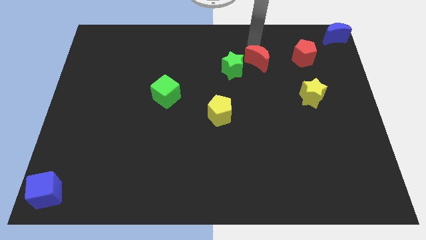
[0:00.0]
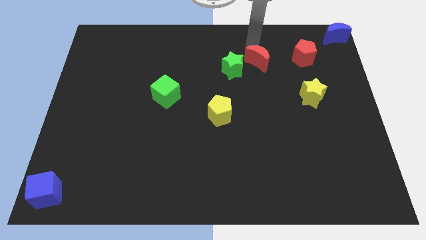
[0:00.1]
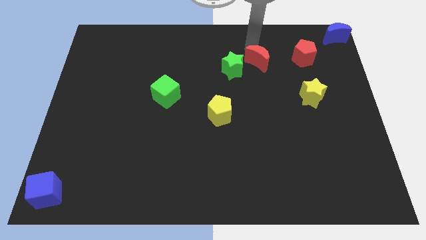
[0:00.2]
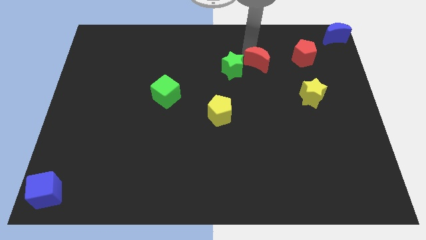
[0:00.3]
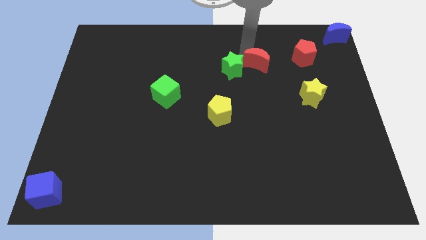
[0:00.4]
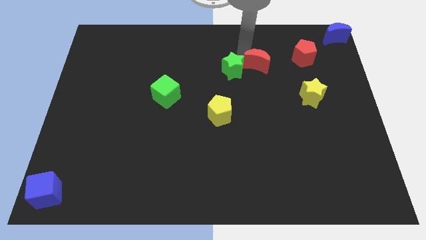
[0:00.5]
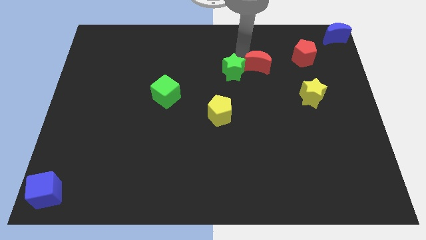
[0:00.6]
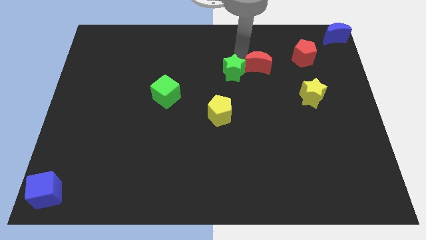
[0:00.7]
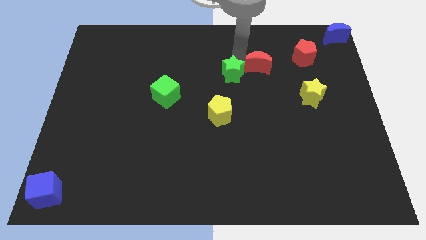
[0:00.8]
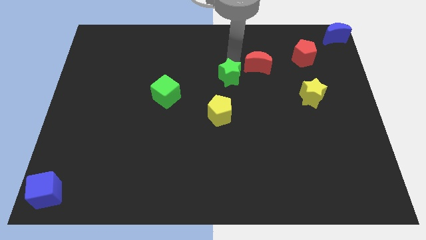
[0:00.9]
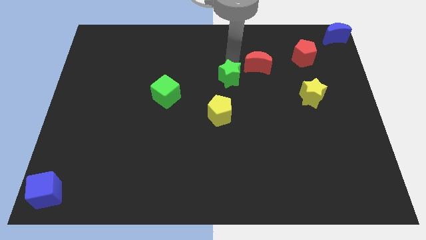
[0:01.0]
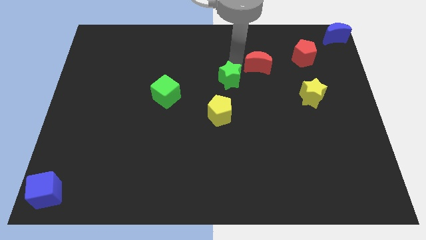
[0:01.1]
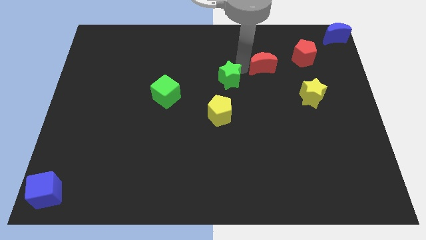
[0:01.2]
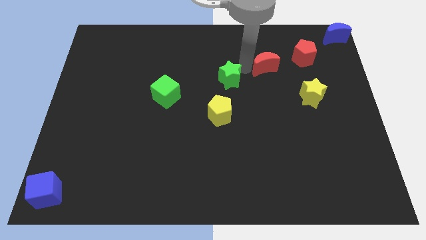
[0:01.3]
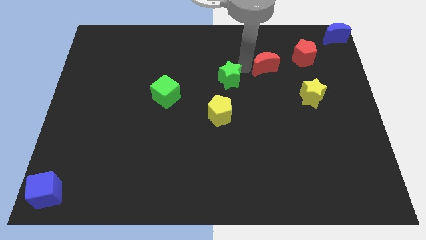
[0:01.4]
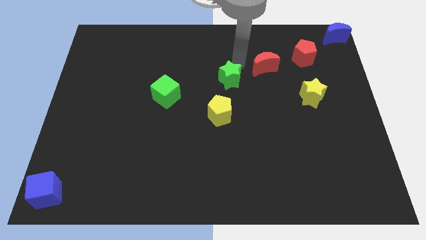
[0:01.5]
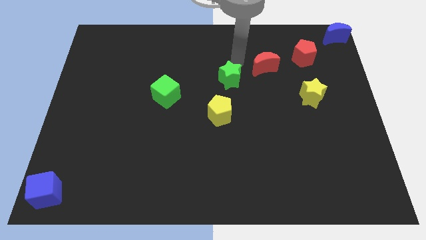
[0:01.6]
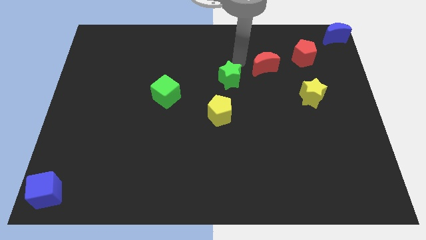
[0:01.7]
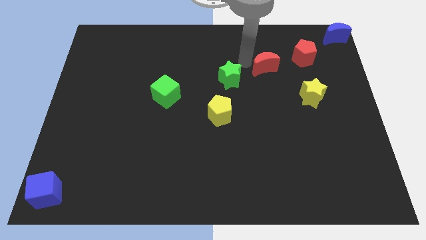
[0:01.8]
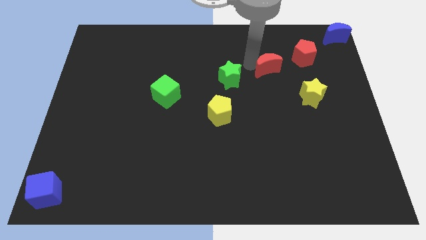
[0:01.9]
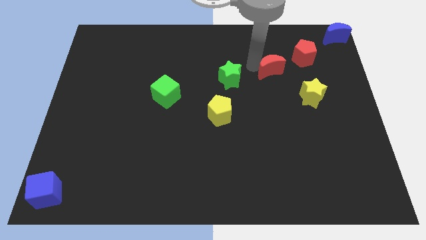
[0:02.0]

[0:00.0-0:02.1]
move red moon towards the green star

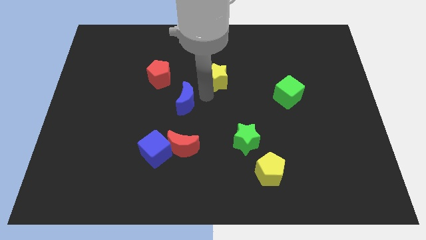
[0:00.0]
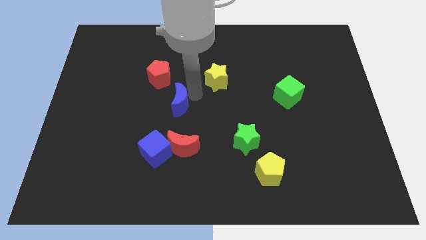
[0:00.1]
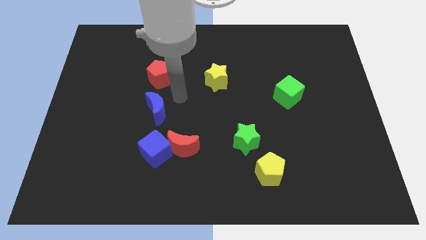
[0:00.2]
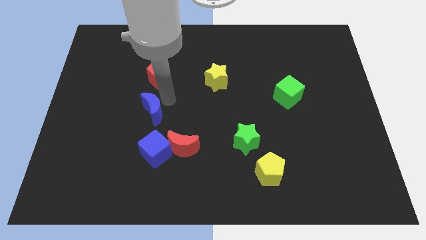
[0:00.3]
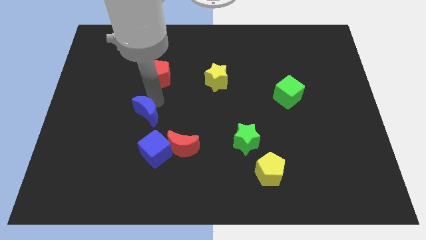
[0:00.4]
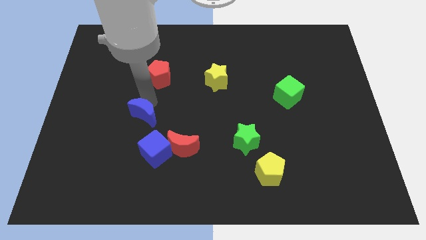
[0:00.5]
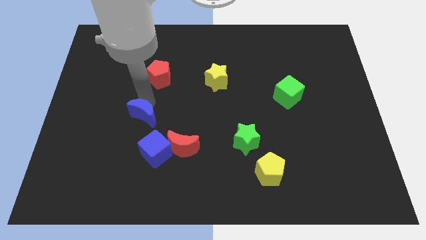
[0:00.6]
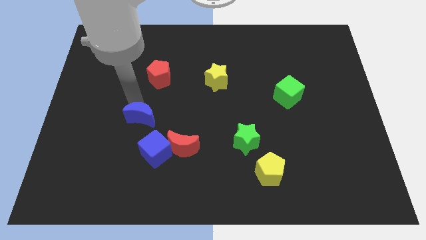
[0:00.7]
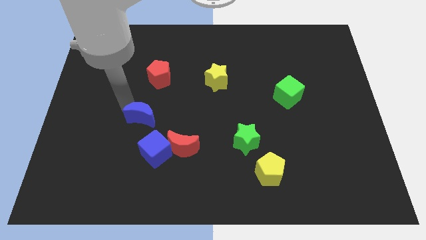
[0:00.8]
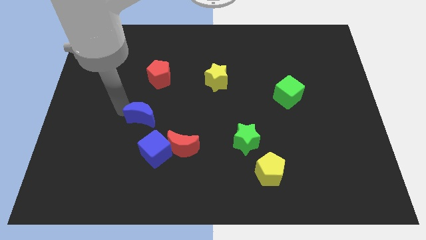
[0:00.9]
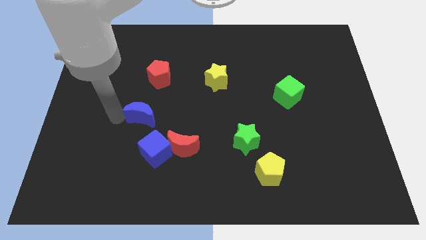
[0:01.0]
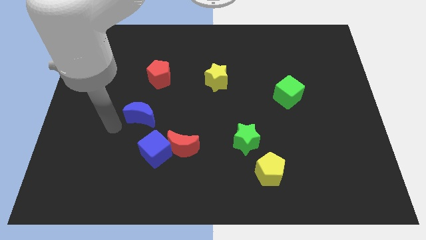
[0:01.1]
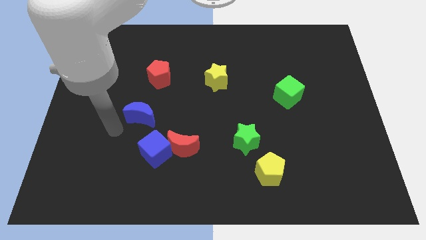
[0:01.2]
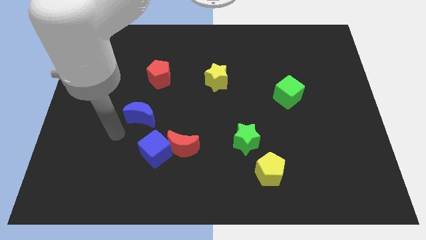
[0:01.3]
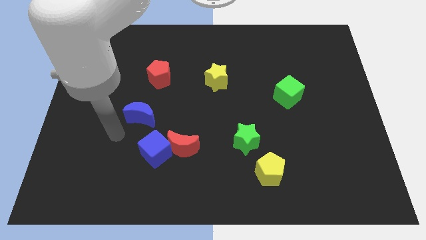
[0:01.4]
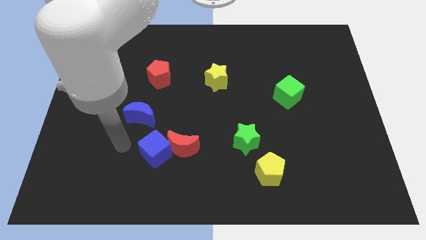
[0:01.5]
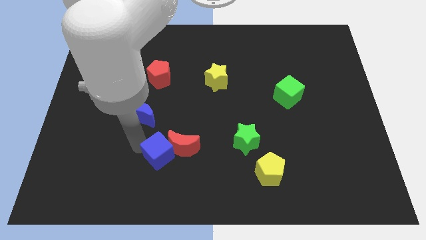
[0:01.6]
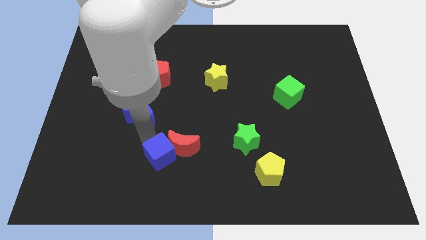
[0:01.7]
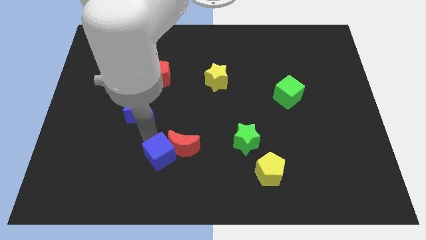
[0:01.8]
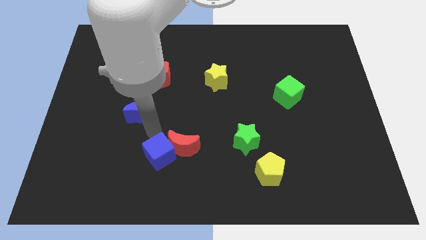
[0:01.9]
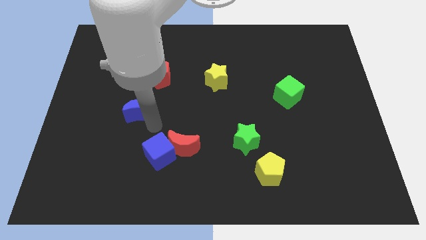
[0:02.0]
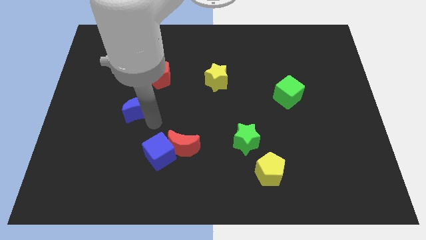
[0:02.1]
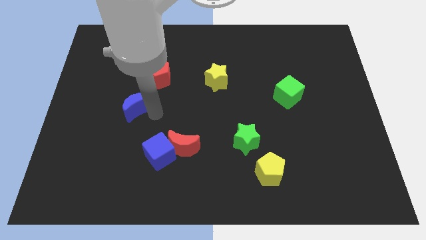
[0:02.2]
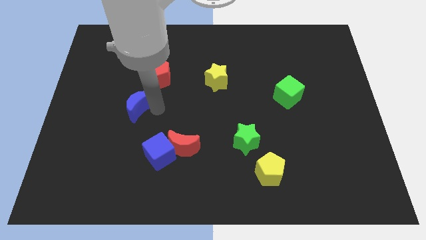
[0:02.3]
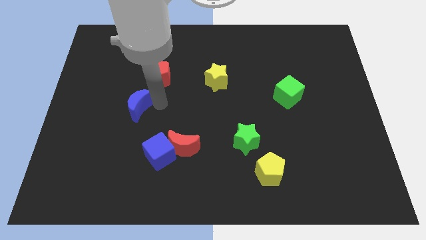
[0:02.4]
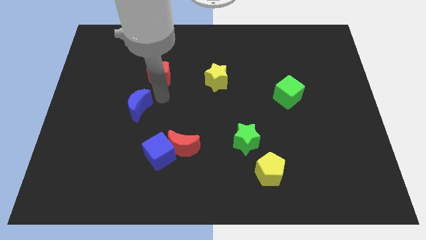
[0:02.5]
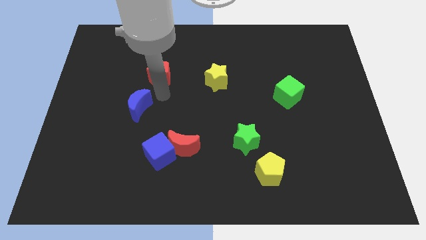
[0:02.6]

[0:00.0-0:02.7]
place the blue moon diagonally to the blue cube

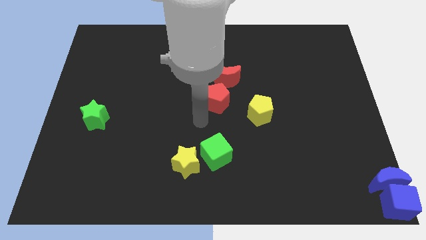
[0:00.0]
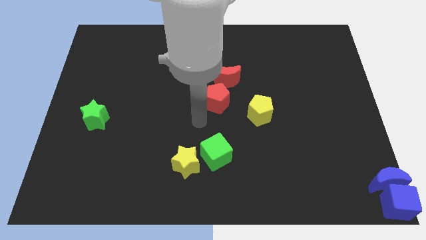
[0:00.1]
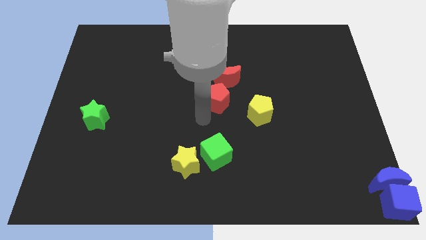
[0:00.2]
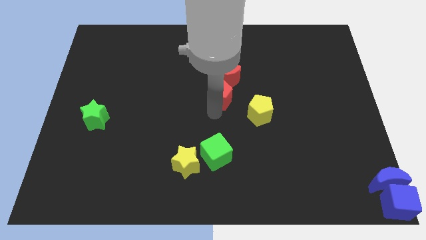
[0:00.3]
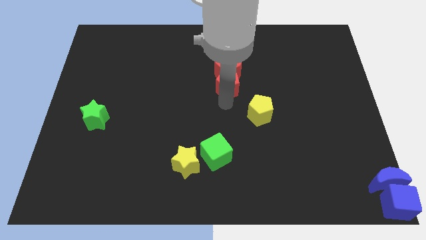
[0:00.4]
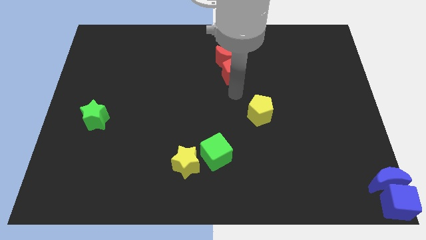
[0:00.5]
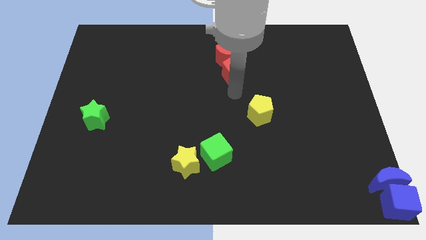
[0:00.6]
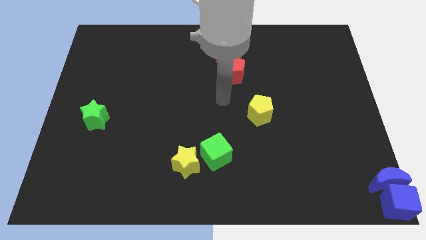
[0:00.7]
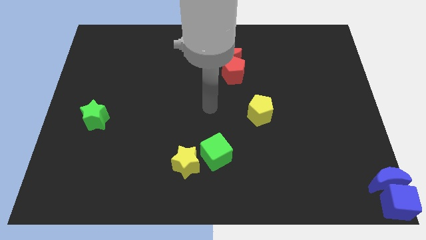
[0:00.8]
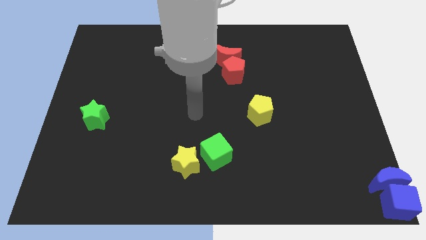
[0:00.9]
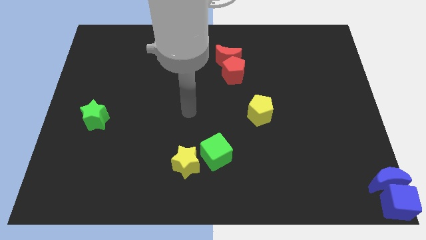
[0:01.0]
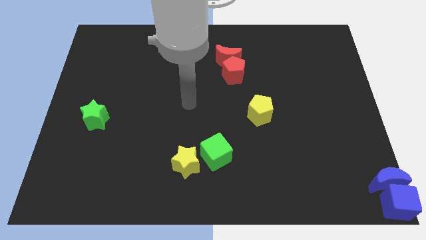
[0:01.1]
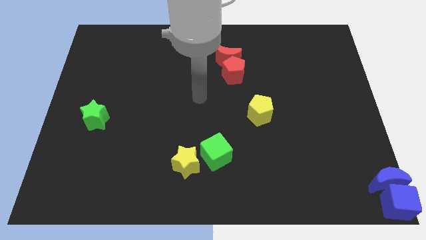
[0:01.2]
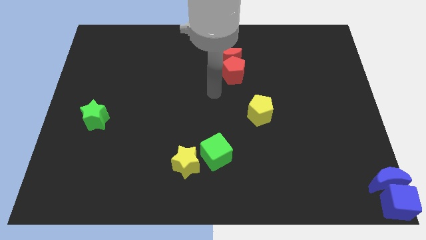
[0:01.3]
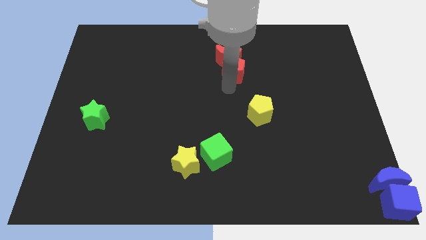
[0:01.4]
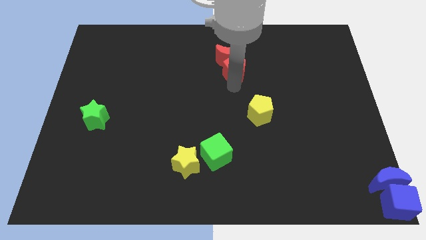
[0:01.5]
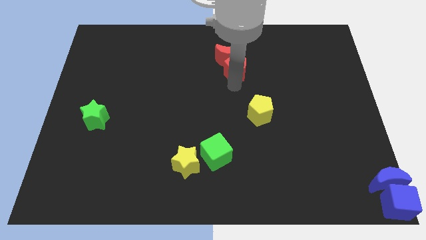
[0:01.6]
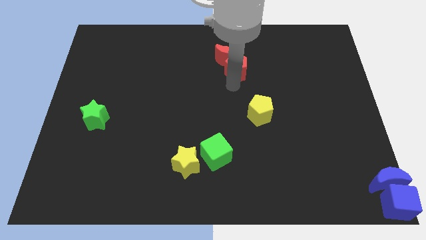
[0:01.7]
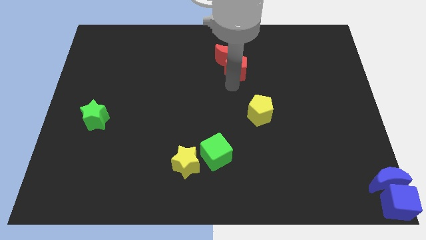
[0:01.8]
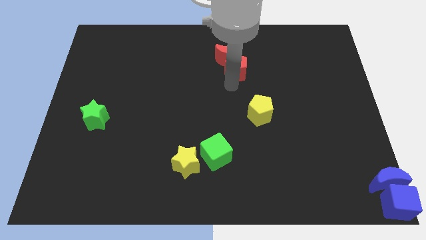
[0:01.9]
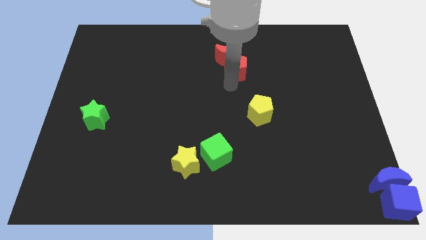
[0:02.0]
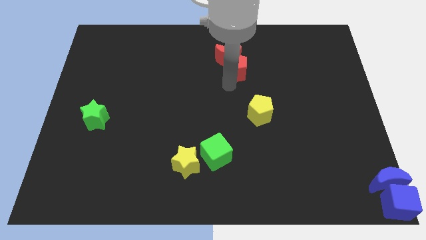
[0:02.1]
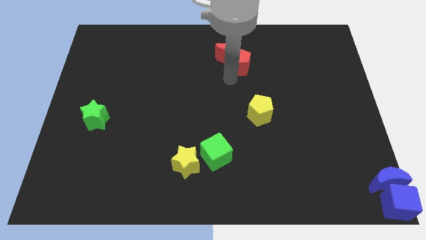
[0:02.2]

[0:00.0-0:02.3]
push the red moon and red pentagon towards the top side

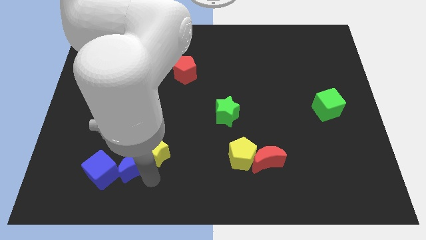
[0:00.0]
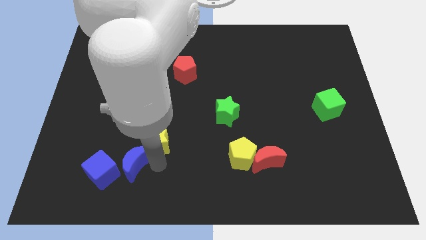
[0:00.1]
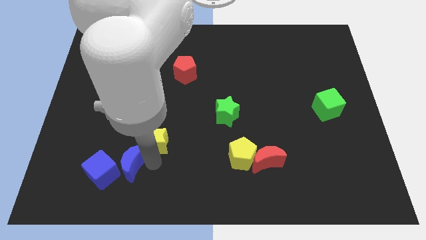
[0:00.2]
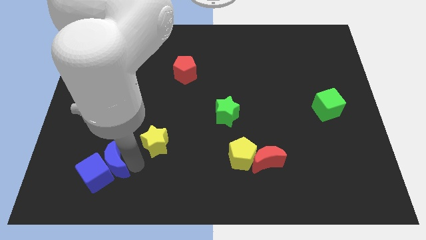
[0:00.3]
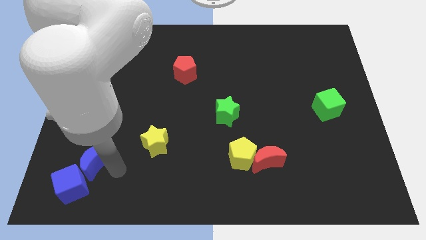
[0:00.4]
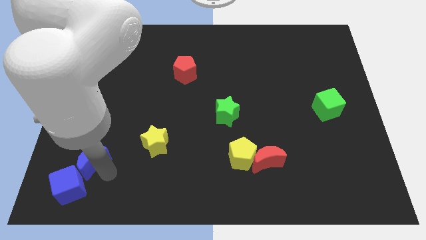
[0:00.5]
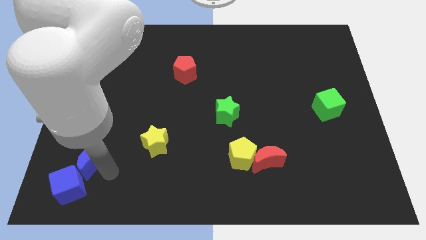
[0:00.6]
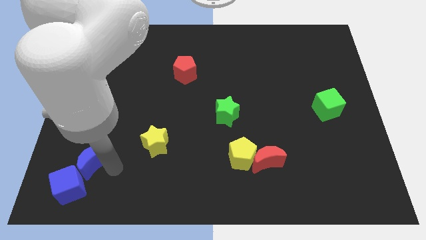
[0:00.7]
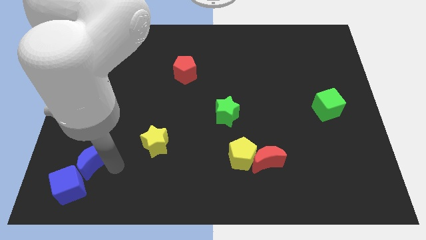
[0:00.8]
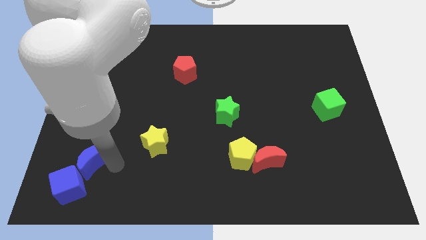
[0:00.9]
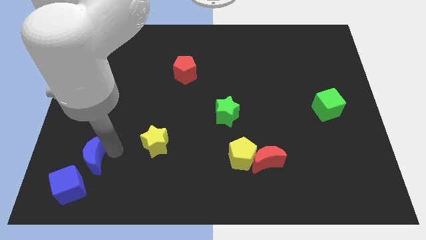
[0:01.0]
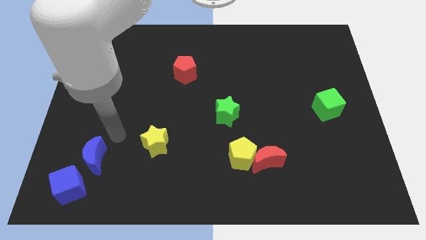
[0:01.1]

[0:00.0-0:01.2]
separate the blue blocks from each other

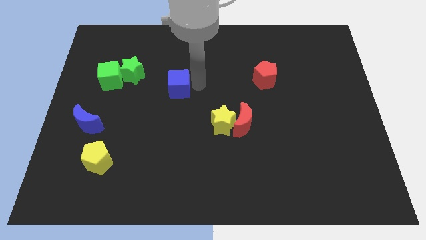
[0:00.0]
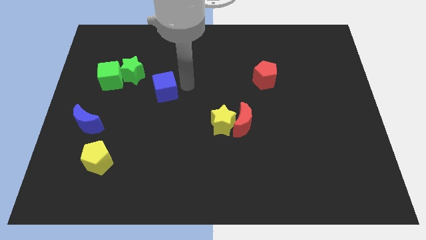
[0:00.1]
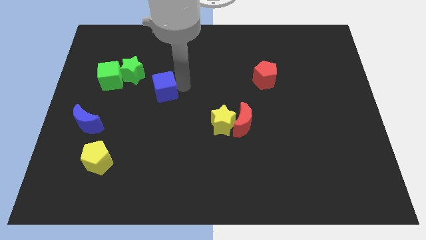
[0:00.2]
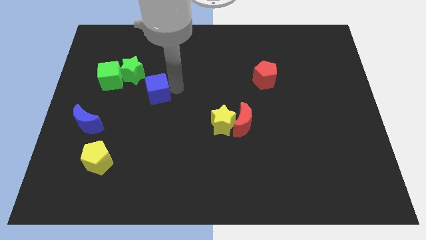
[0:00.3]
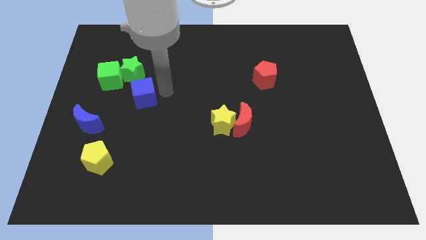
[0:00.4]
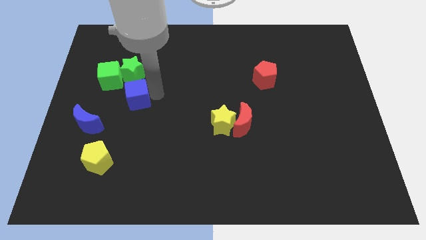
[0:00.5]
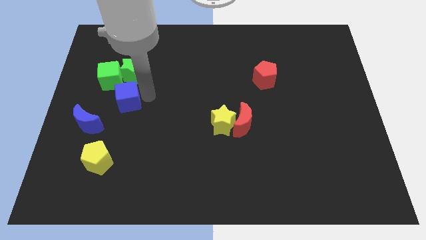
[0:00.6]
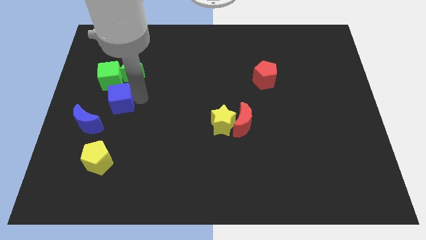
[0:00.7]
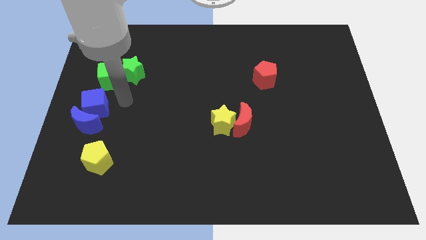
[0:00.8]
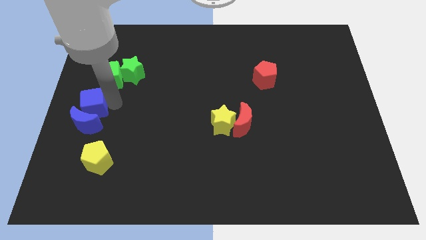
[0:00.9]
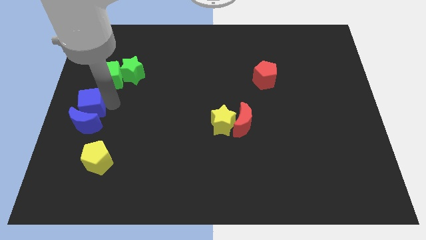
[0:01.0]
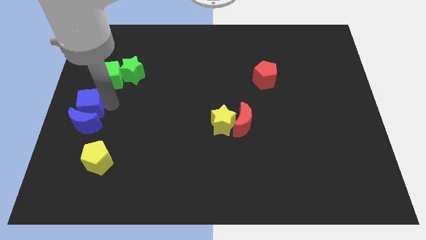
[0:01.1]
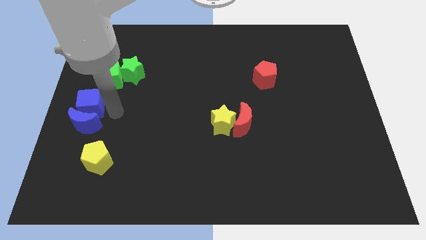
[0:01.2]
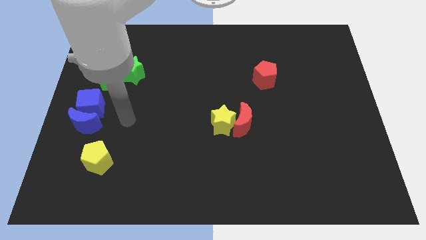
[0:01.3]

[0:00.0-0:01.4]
move the blue cube into the blue crescent
